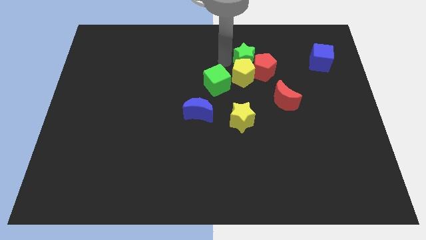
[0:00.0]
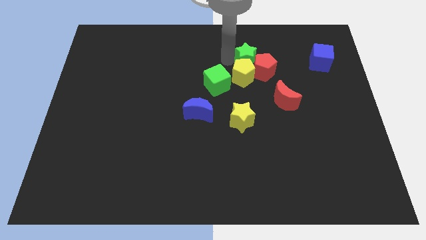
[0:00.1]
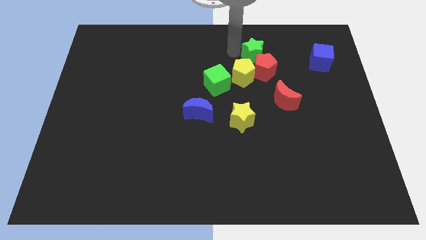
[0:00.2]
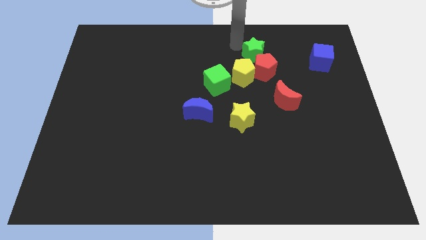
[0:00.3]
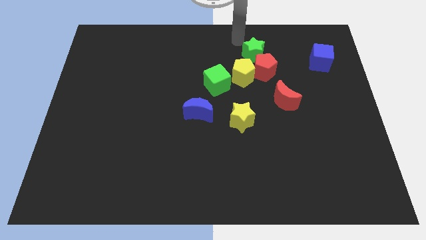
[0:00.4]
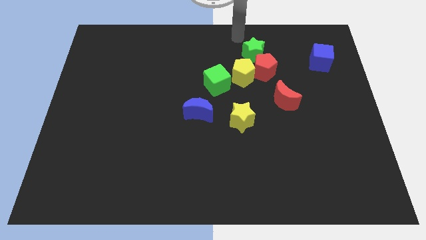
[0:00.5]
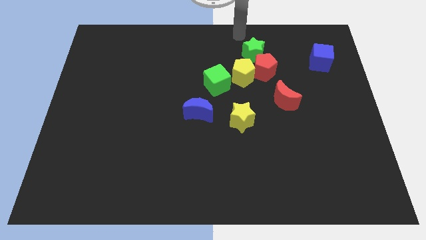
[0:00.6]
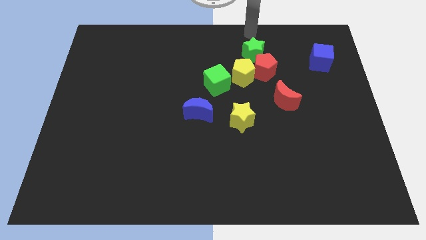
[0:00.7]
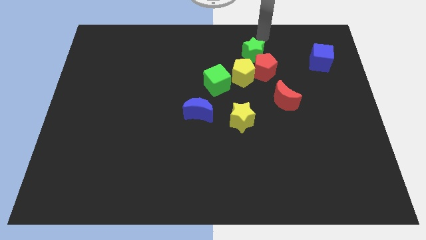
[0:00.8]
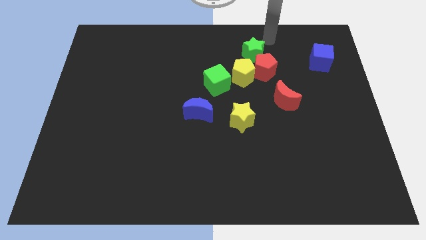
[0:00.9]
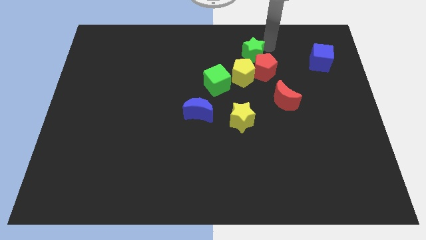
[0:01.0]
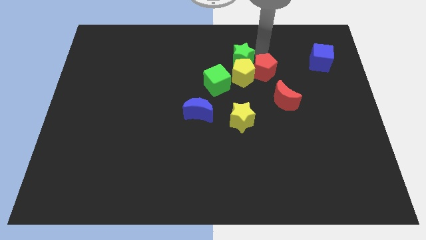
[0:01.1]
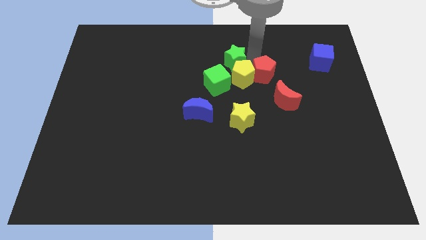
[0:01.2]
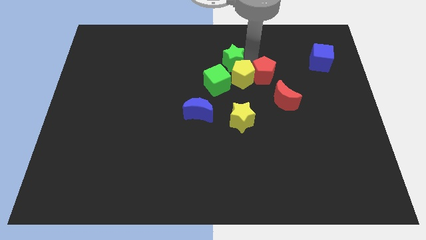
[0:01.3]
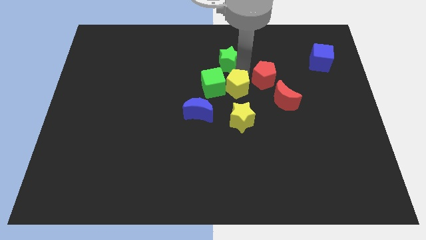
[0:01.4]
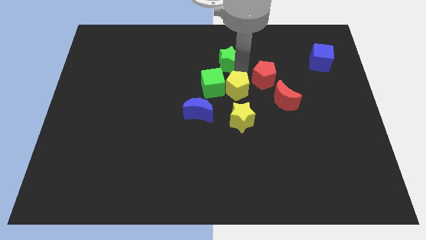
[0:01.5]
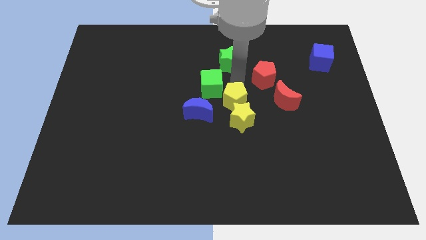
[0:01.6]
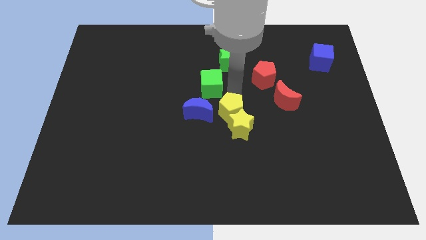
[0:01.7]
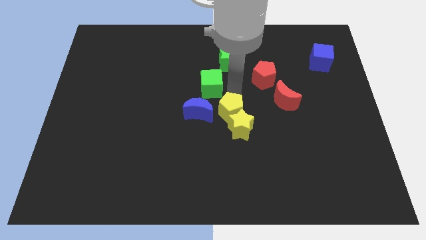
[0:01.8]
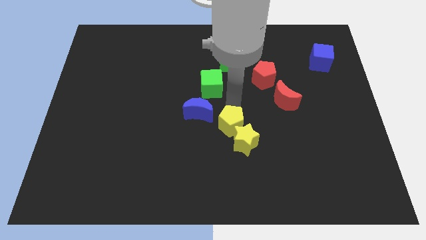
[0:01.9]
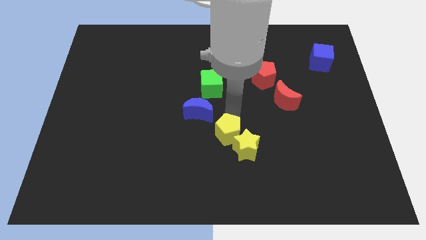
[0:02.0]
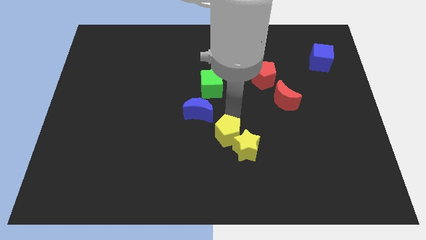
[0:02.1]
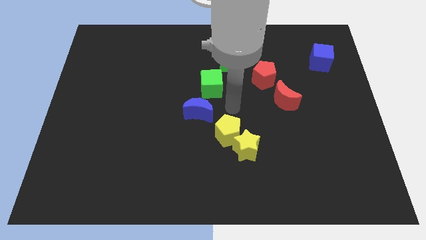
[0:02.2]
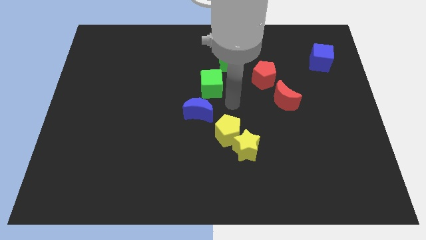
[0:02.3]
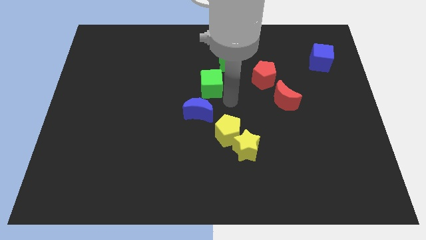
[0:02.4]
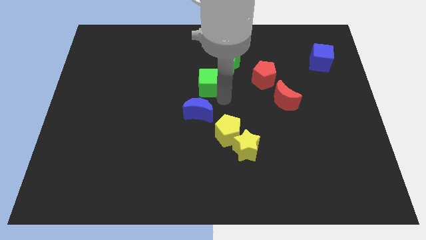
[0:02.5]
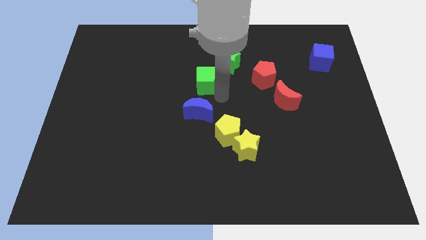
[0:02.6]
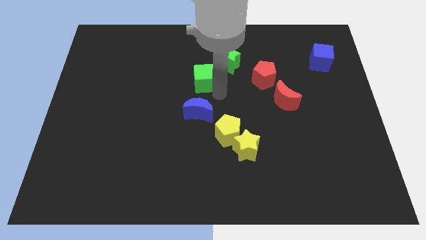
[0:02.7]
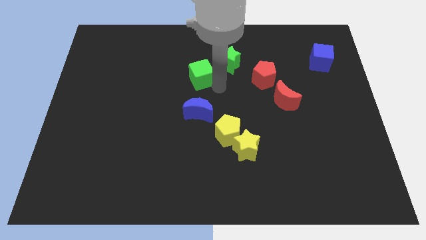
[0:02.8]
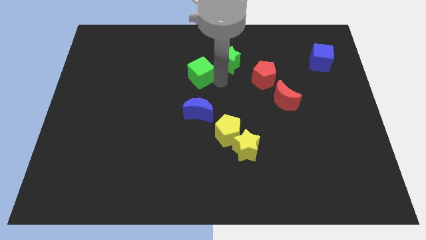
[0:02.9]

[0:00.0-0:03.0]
separate the yellow and green blocks

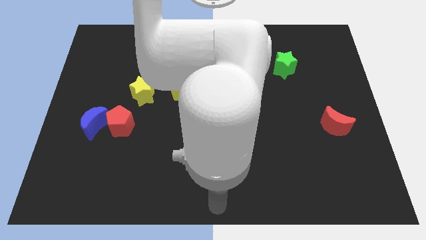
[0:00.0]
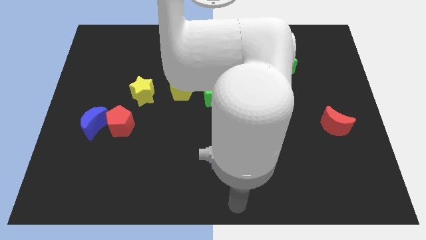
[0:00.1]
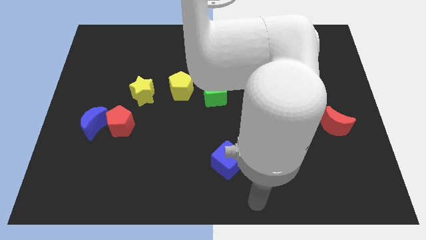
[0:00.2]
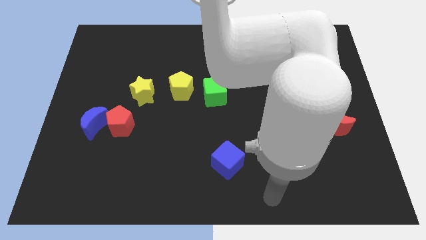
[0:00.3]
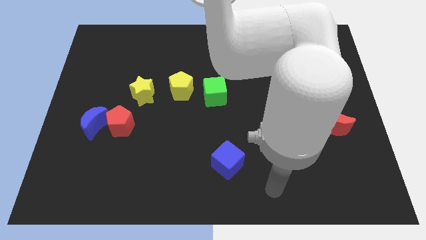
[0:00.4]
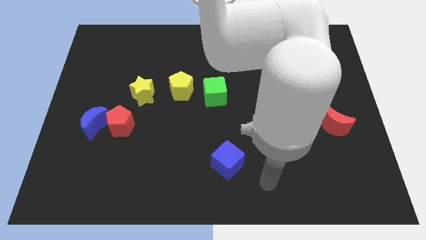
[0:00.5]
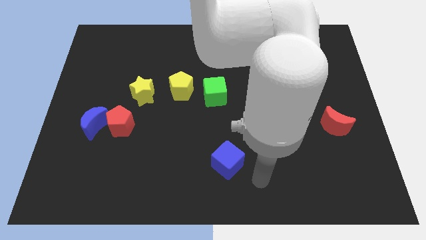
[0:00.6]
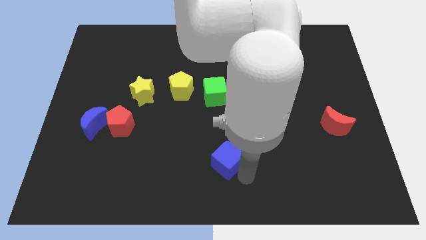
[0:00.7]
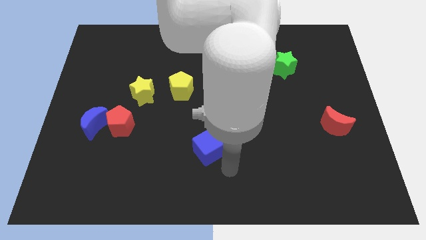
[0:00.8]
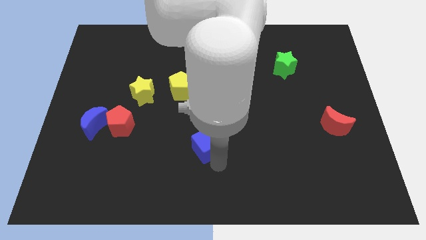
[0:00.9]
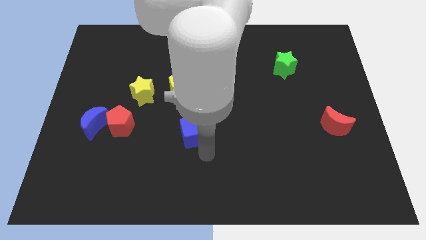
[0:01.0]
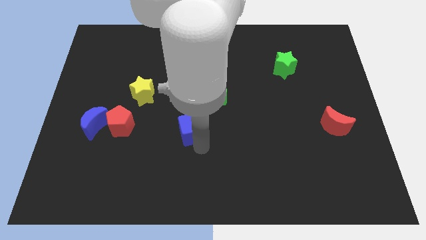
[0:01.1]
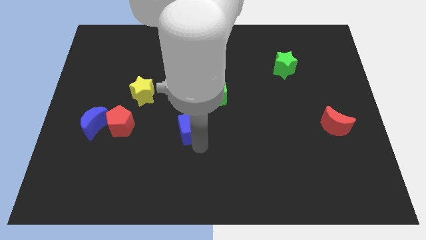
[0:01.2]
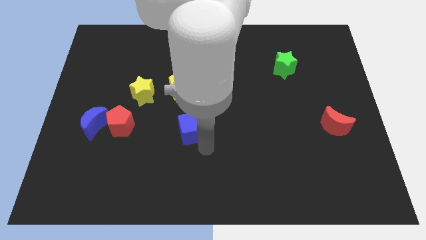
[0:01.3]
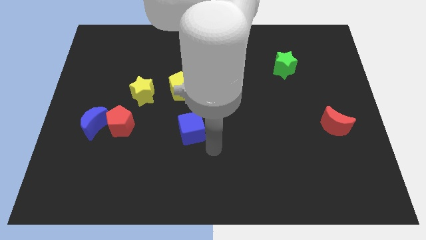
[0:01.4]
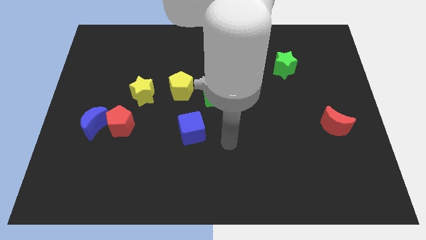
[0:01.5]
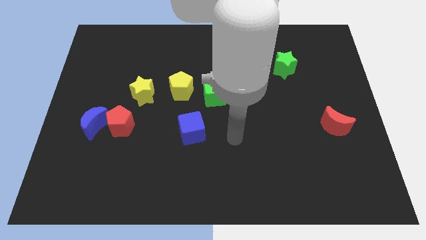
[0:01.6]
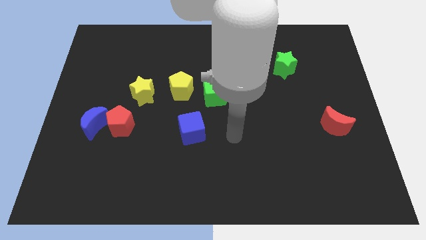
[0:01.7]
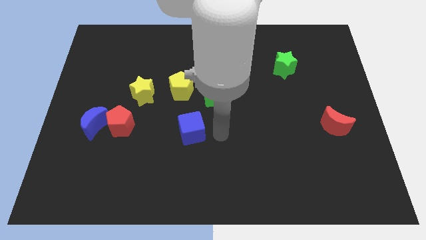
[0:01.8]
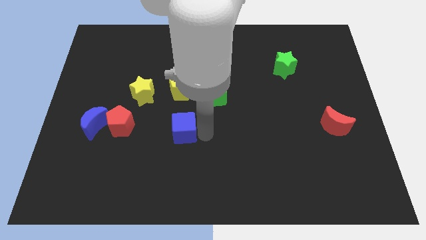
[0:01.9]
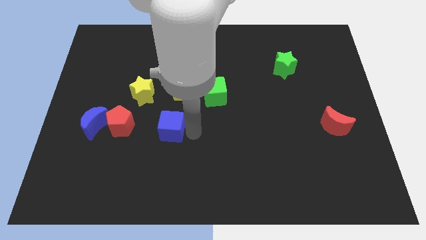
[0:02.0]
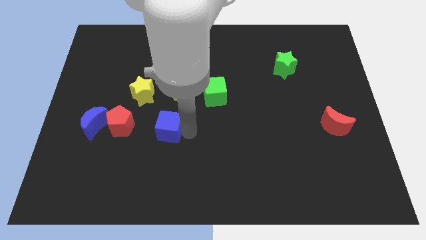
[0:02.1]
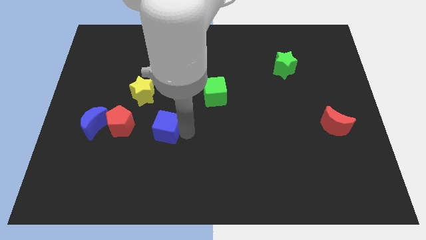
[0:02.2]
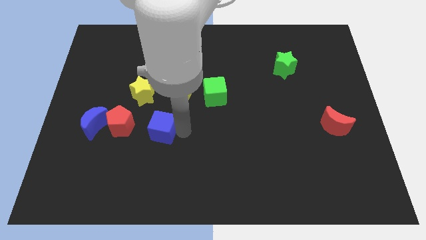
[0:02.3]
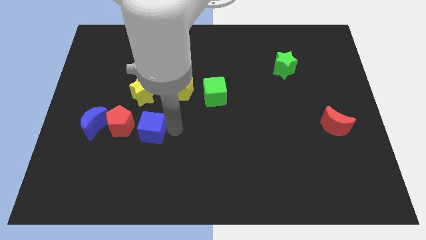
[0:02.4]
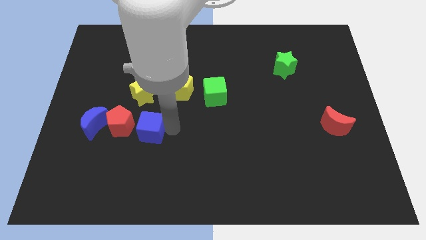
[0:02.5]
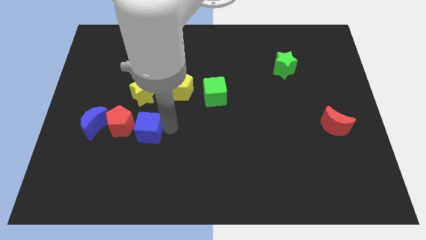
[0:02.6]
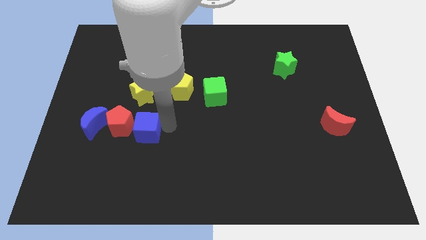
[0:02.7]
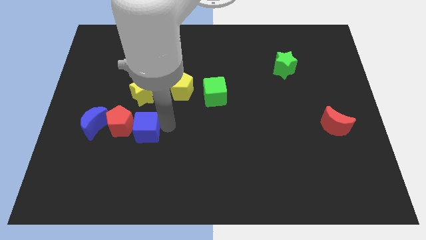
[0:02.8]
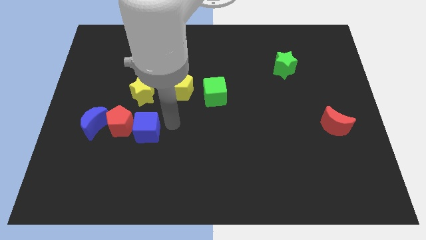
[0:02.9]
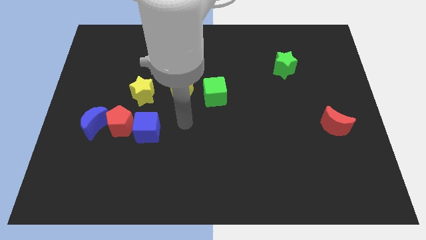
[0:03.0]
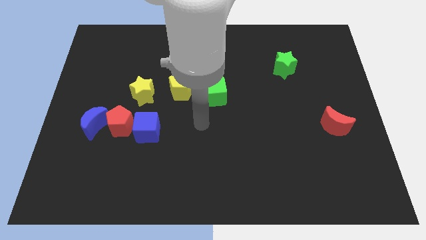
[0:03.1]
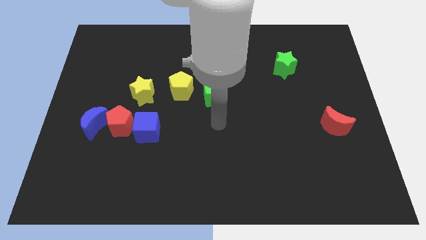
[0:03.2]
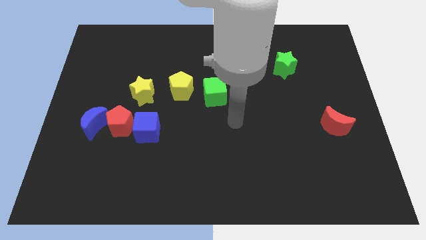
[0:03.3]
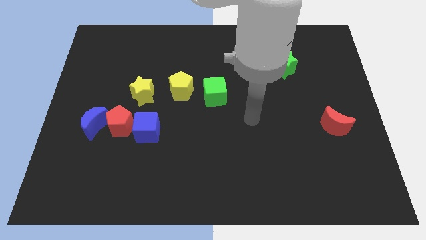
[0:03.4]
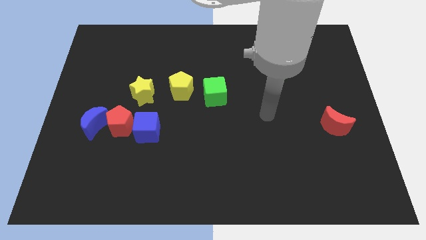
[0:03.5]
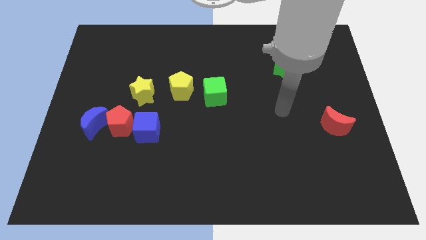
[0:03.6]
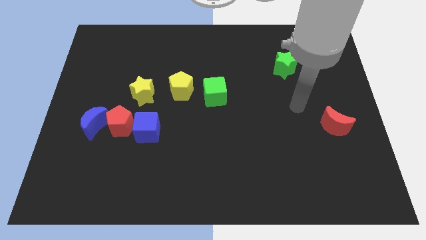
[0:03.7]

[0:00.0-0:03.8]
move the blue cube to the right of red pentagon

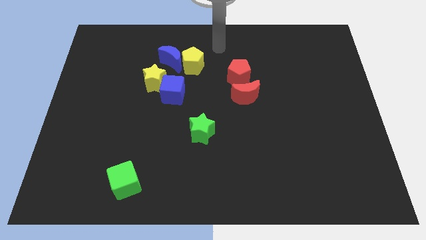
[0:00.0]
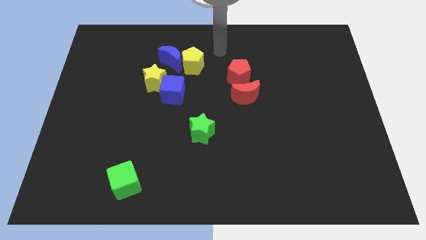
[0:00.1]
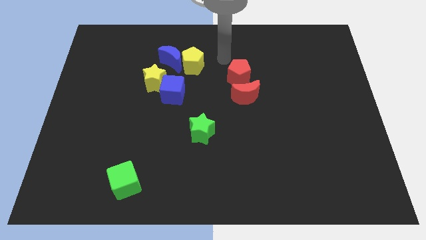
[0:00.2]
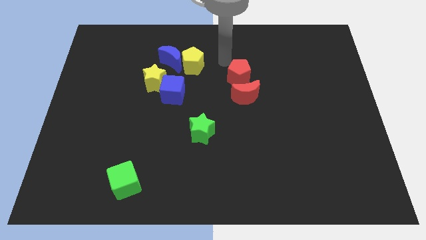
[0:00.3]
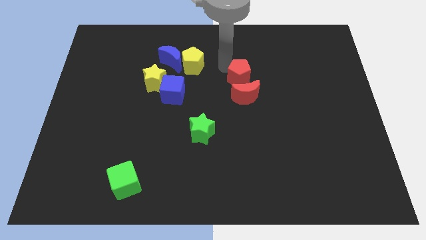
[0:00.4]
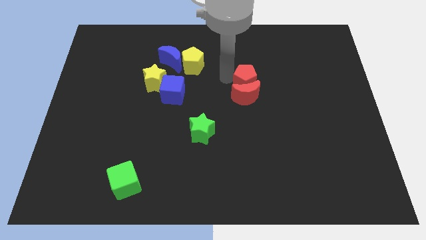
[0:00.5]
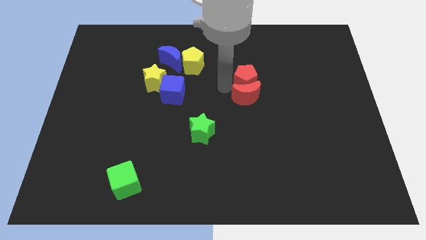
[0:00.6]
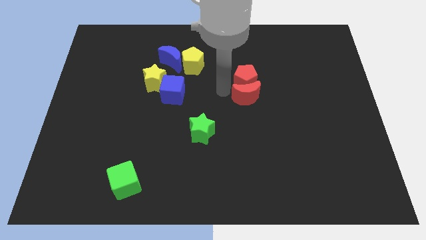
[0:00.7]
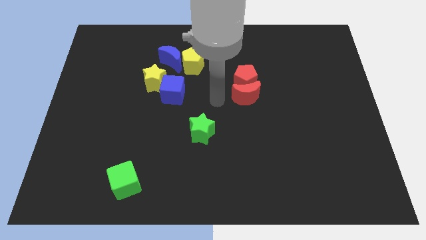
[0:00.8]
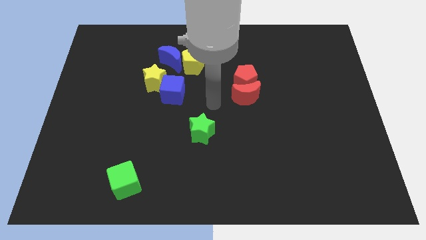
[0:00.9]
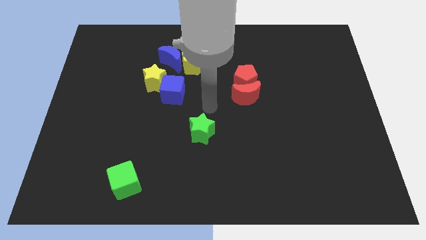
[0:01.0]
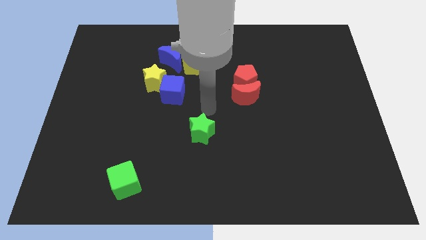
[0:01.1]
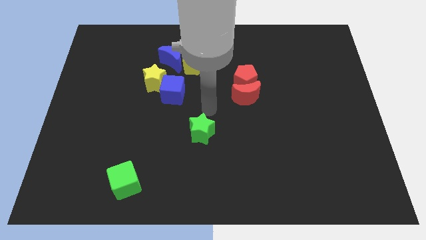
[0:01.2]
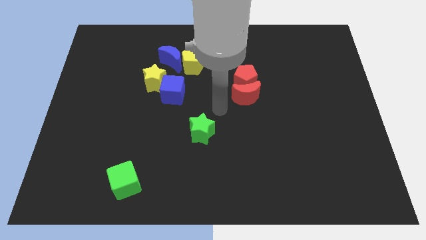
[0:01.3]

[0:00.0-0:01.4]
touch the red moon with red pentagon

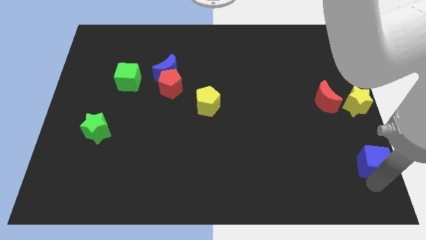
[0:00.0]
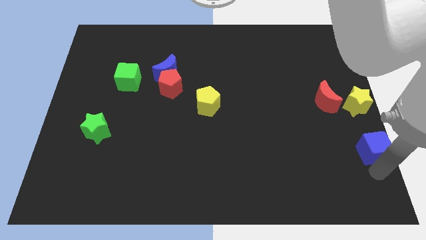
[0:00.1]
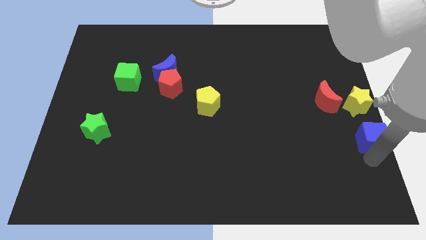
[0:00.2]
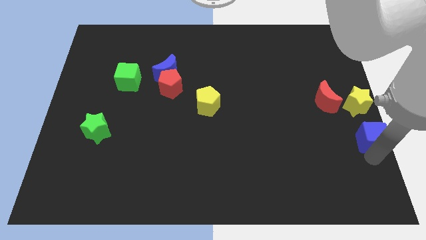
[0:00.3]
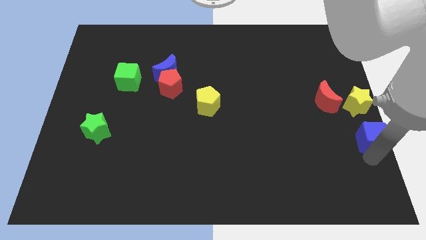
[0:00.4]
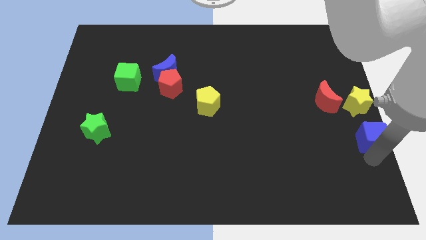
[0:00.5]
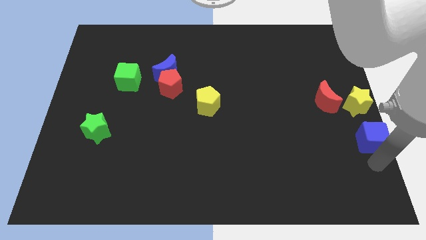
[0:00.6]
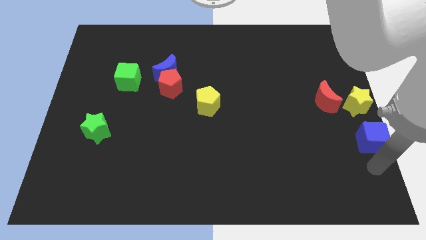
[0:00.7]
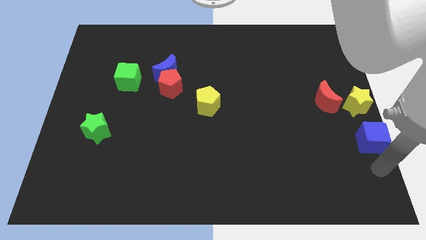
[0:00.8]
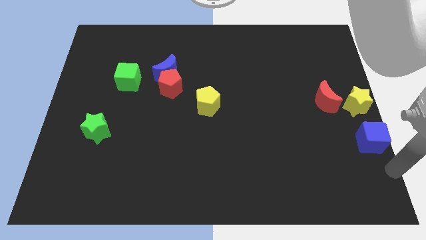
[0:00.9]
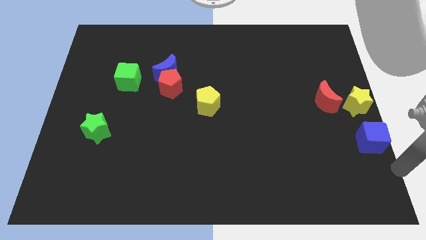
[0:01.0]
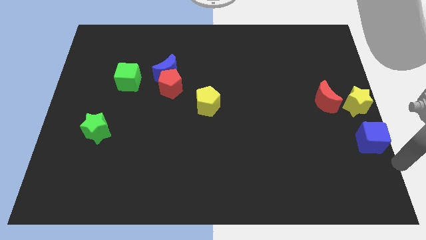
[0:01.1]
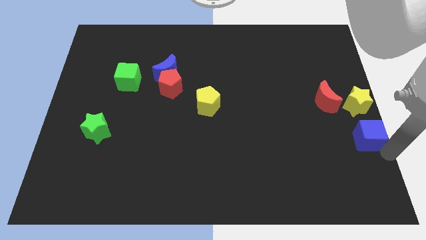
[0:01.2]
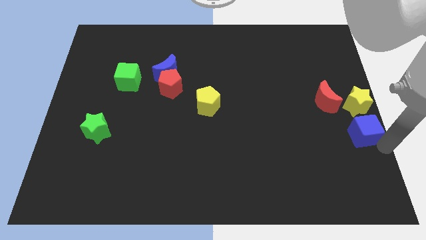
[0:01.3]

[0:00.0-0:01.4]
push the blue cube below the yellow star
